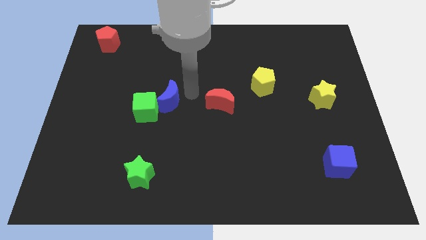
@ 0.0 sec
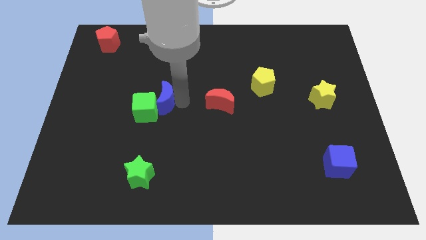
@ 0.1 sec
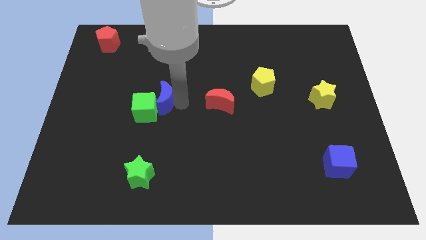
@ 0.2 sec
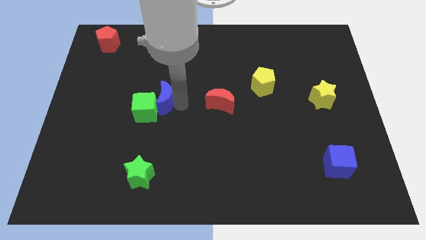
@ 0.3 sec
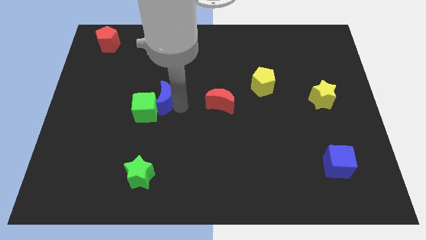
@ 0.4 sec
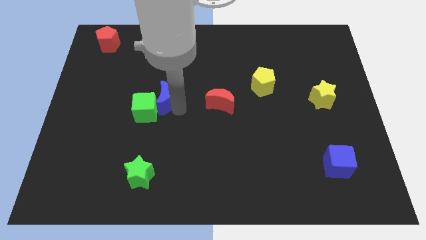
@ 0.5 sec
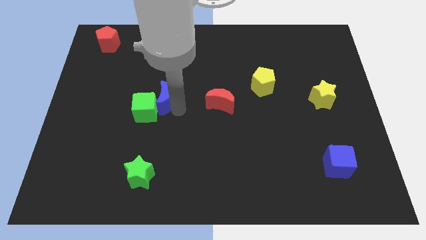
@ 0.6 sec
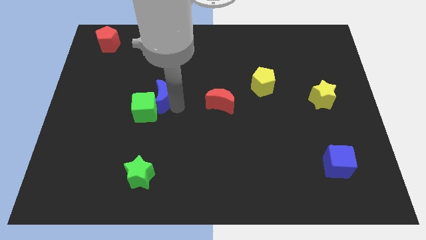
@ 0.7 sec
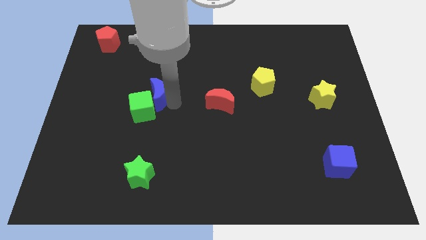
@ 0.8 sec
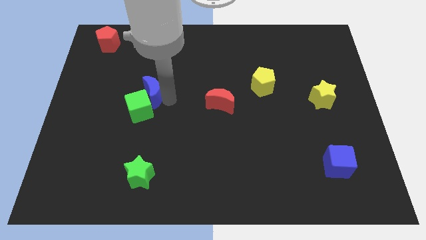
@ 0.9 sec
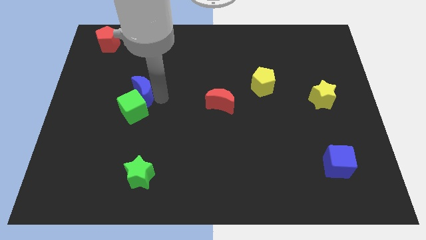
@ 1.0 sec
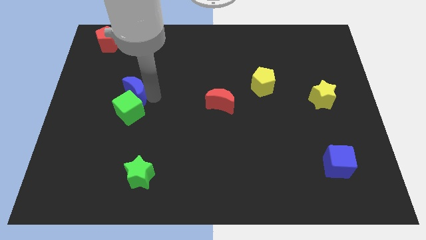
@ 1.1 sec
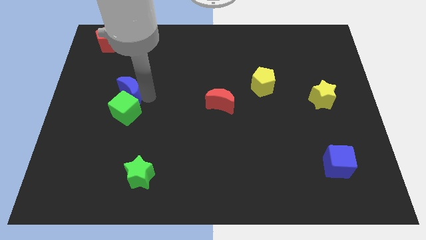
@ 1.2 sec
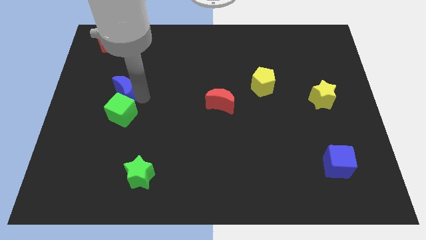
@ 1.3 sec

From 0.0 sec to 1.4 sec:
push the blue crescent and green cube towards the left side of the board

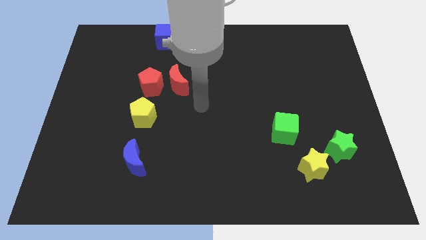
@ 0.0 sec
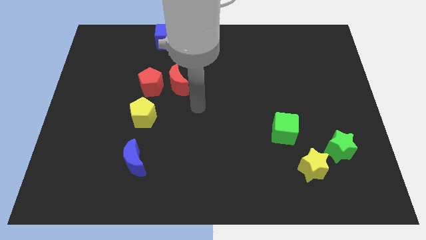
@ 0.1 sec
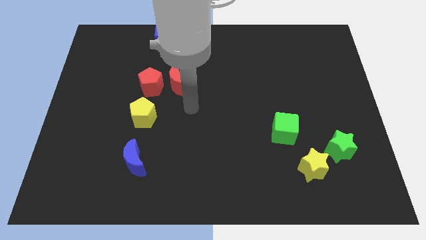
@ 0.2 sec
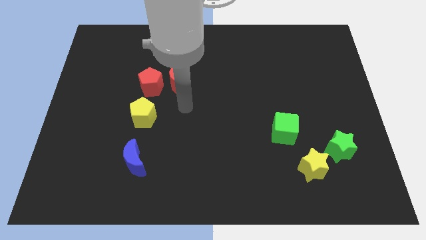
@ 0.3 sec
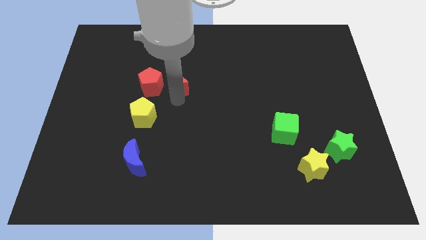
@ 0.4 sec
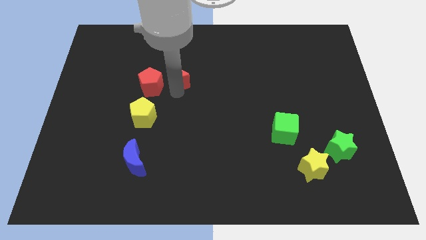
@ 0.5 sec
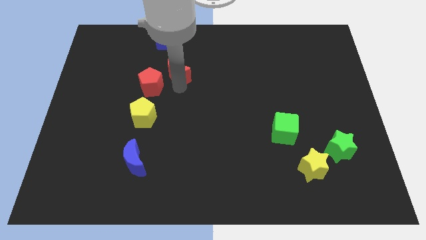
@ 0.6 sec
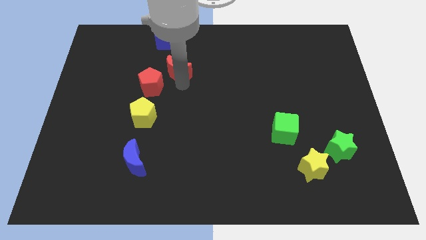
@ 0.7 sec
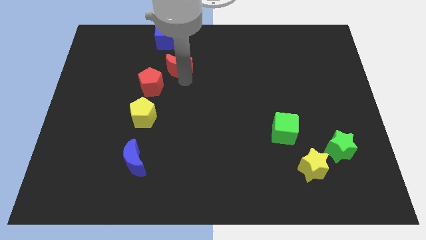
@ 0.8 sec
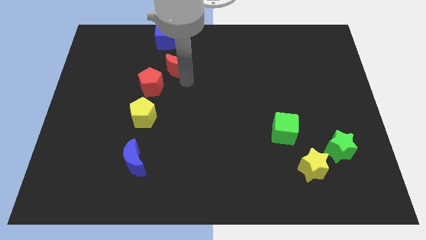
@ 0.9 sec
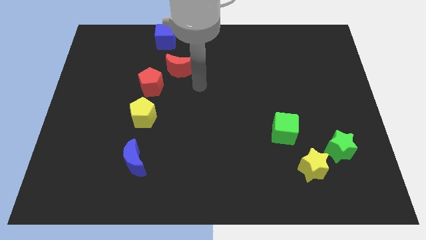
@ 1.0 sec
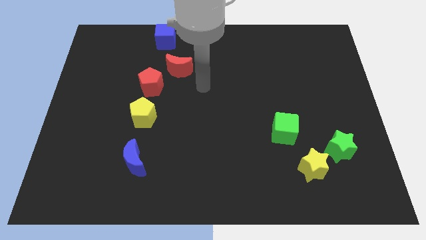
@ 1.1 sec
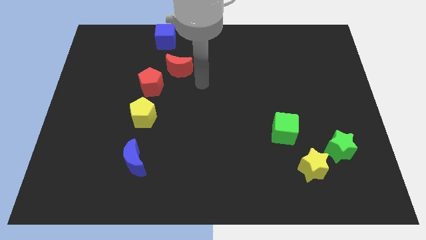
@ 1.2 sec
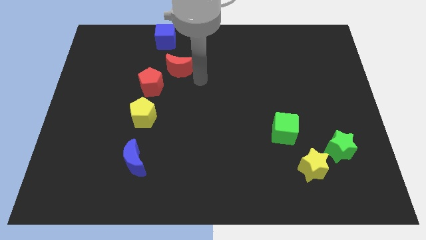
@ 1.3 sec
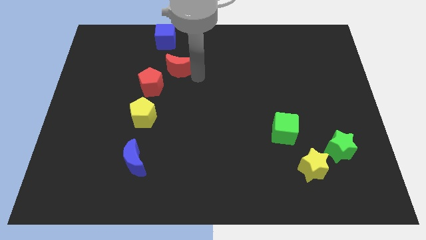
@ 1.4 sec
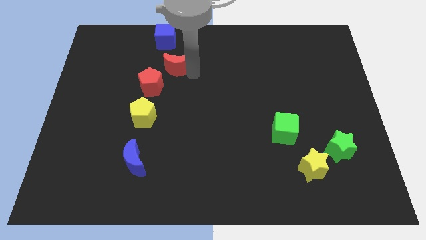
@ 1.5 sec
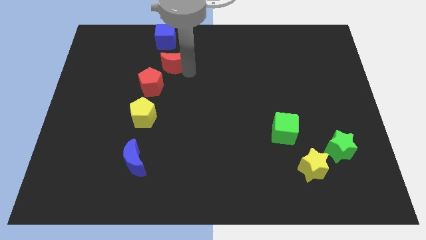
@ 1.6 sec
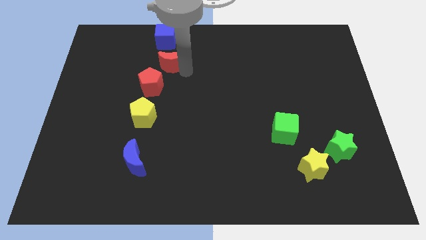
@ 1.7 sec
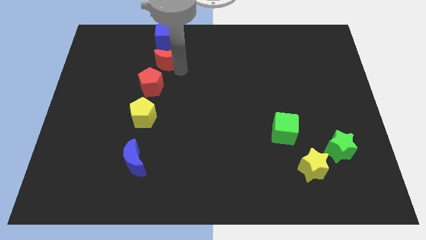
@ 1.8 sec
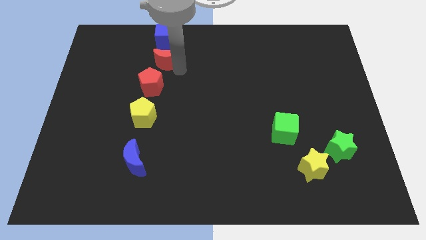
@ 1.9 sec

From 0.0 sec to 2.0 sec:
push the re moon to the bottom of the blue cube

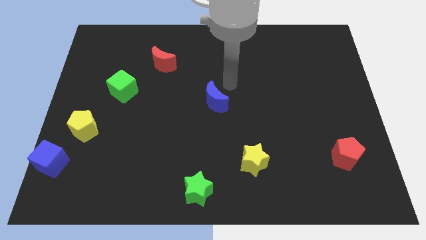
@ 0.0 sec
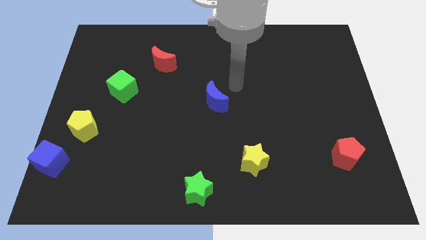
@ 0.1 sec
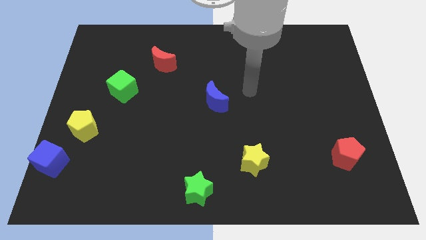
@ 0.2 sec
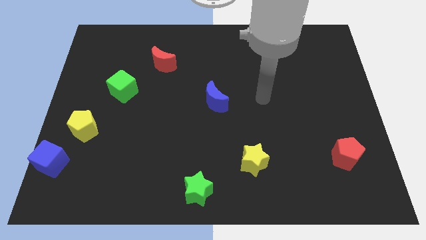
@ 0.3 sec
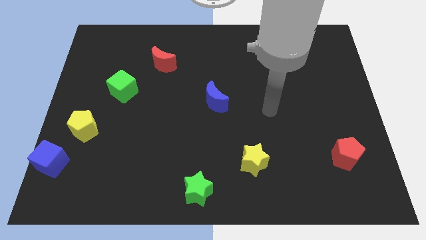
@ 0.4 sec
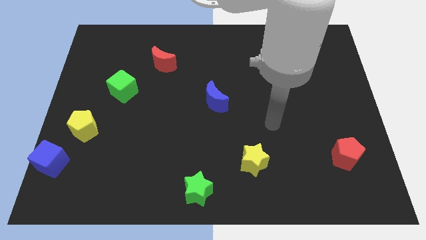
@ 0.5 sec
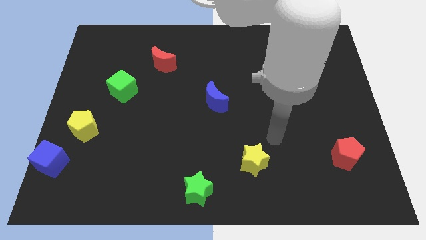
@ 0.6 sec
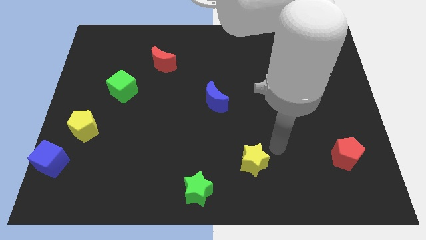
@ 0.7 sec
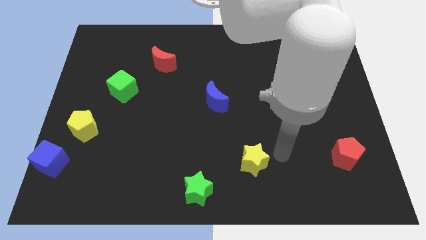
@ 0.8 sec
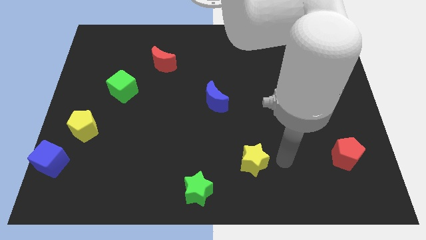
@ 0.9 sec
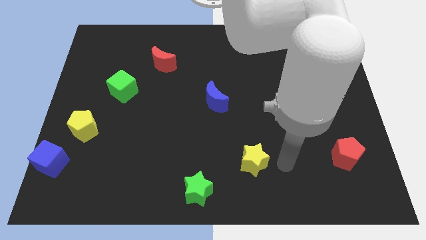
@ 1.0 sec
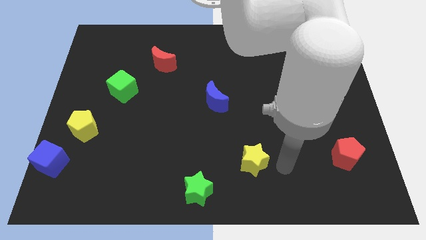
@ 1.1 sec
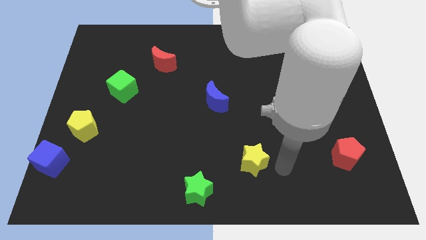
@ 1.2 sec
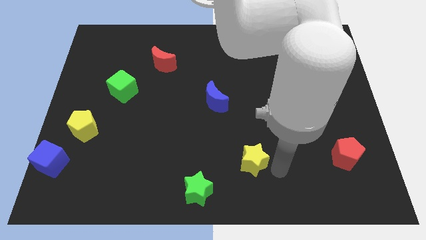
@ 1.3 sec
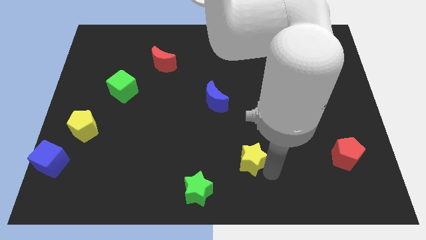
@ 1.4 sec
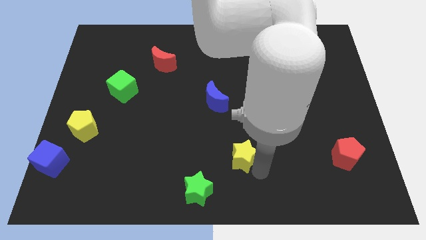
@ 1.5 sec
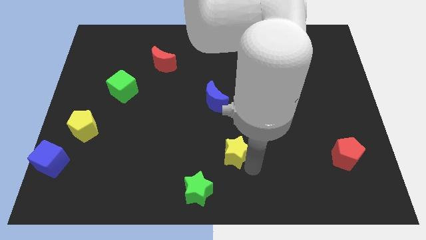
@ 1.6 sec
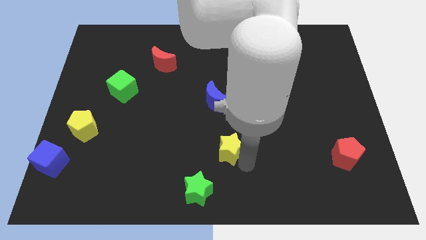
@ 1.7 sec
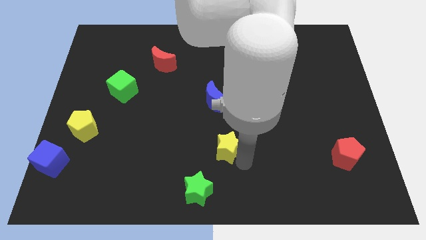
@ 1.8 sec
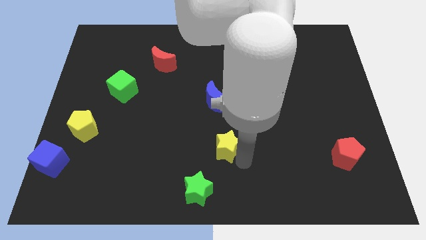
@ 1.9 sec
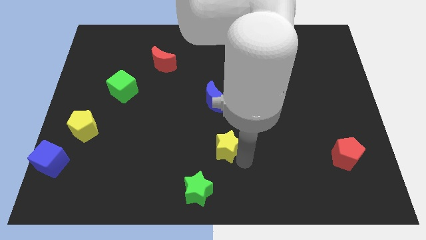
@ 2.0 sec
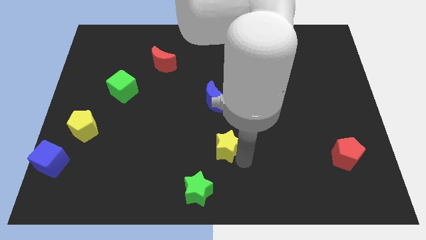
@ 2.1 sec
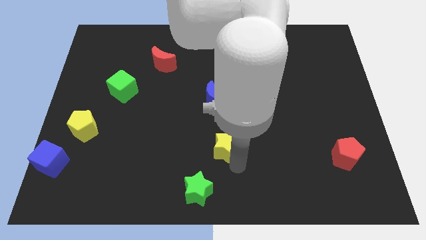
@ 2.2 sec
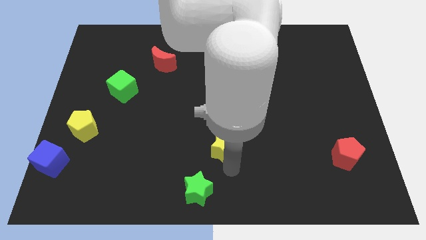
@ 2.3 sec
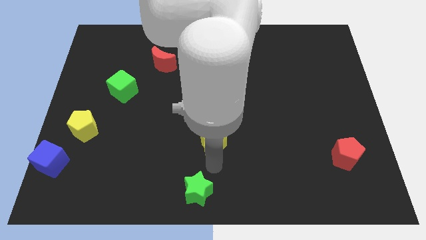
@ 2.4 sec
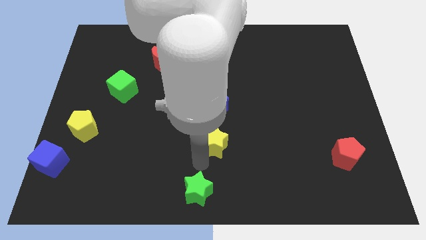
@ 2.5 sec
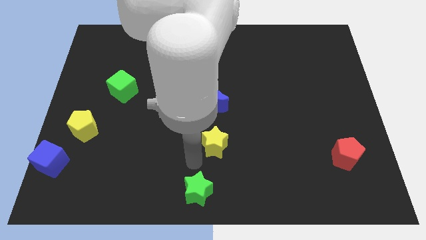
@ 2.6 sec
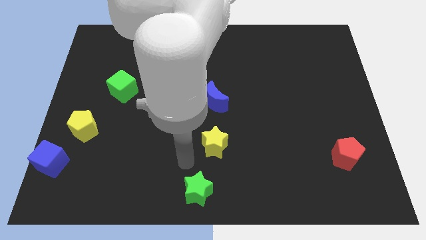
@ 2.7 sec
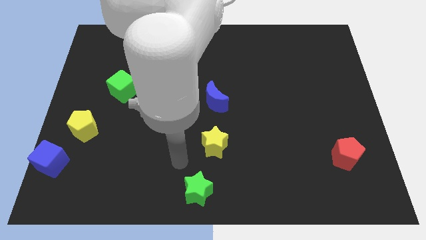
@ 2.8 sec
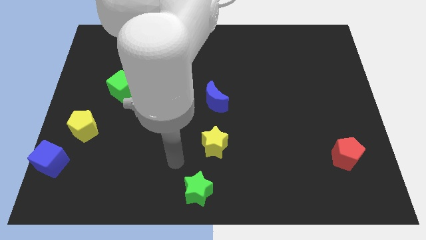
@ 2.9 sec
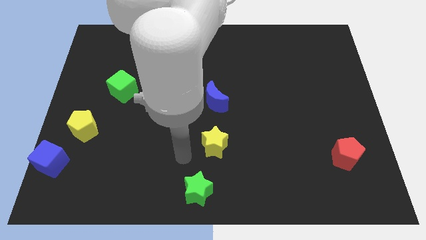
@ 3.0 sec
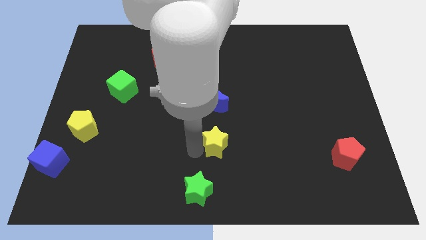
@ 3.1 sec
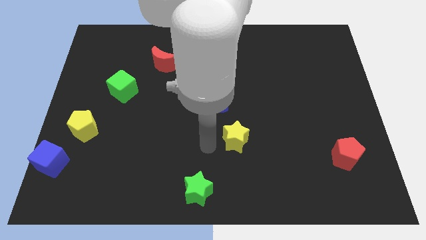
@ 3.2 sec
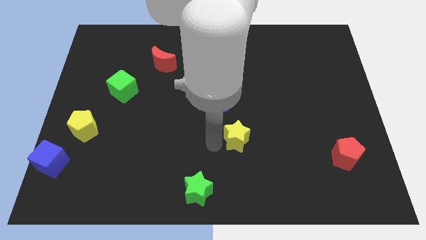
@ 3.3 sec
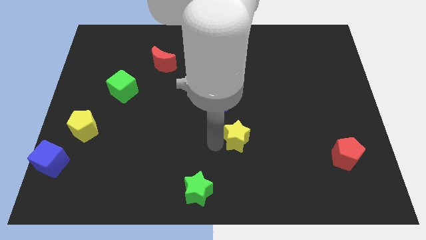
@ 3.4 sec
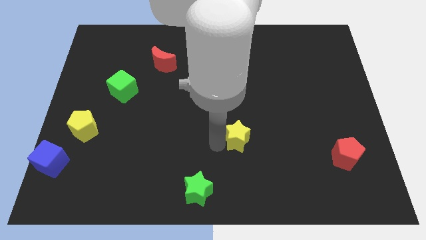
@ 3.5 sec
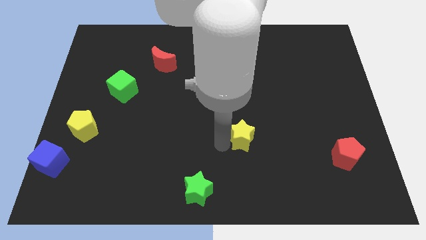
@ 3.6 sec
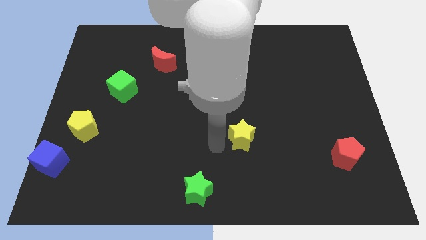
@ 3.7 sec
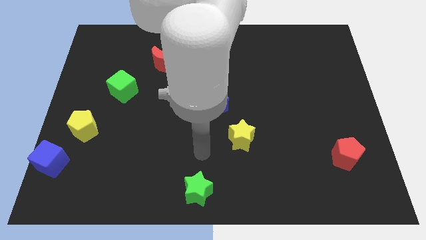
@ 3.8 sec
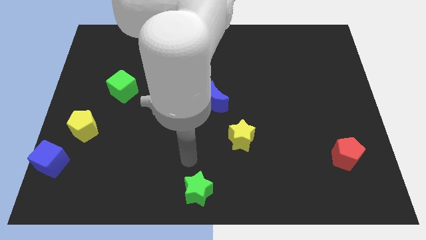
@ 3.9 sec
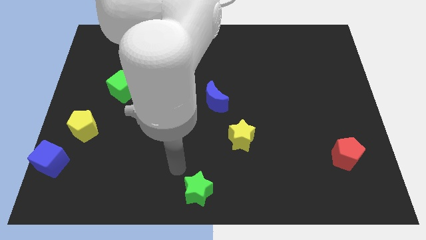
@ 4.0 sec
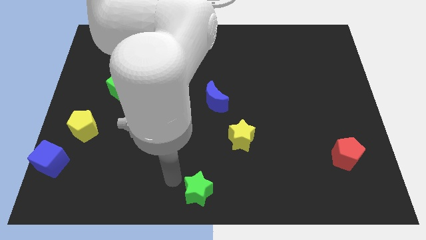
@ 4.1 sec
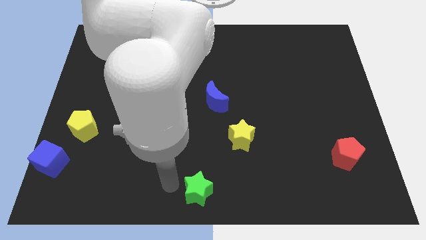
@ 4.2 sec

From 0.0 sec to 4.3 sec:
move the yellow star below the blue crescent

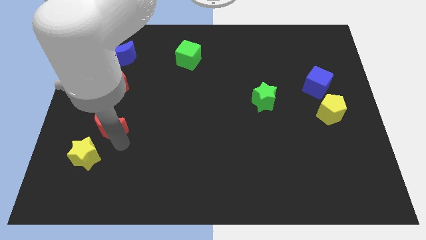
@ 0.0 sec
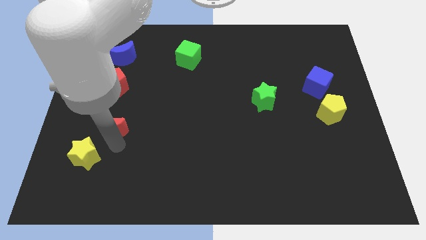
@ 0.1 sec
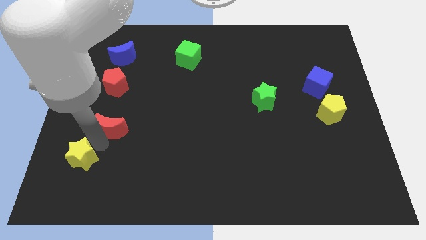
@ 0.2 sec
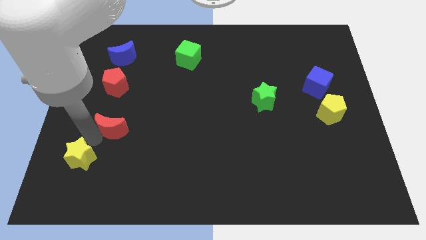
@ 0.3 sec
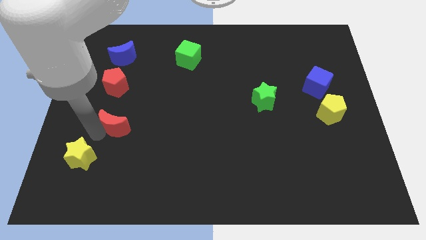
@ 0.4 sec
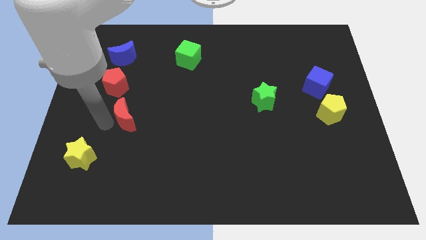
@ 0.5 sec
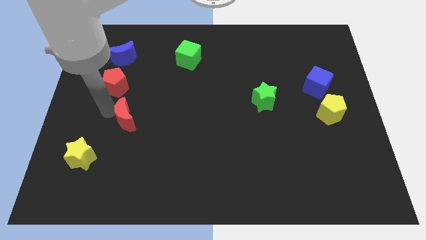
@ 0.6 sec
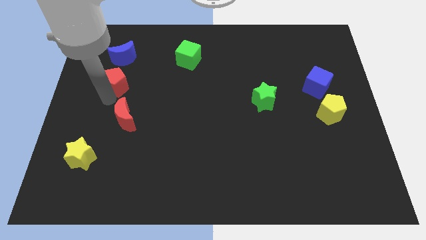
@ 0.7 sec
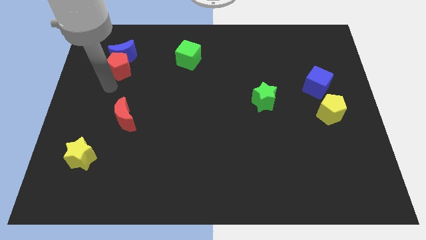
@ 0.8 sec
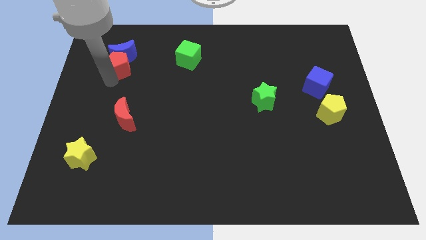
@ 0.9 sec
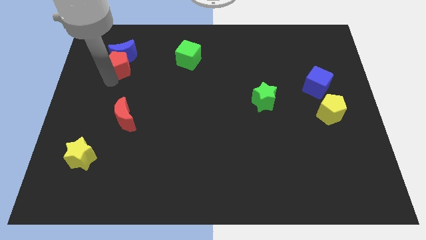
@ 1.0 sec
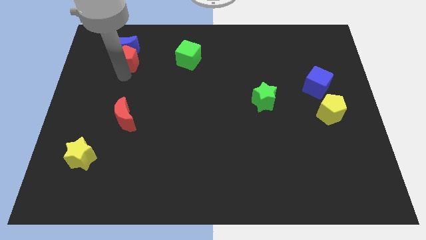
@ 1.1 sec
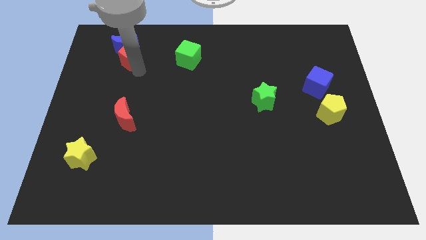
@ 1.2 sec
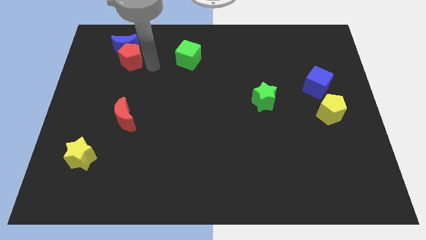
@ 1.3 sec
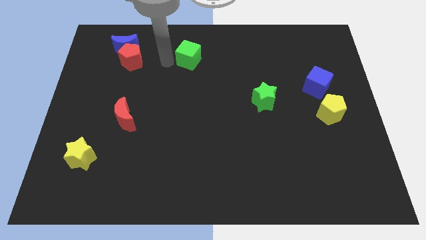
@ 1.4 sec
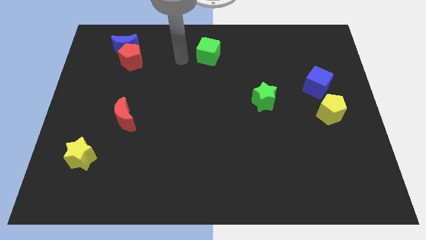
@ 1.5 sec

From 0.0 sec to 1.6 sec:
push the red pentagon close to the blue crescent
